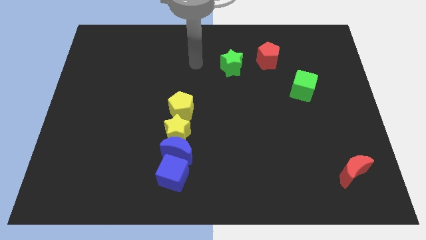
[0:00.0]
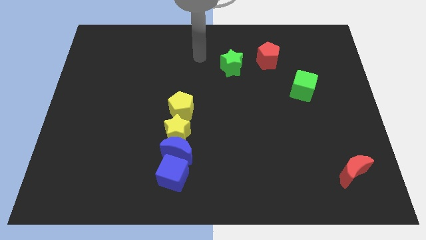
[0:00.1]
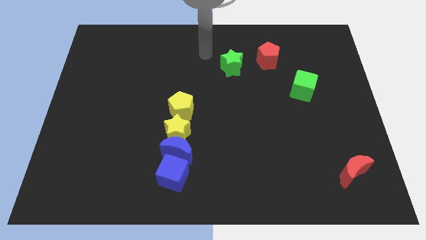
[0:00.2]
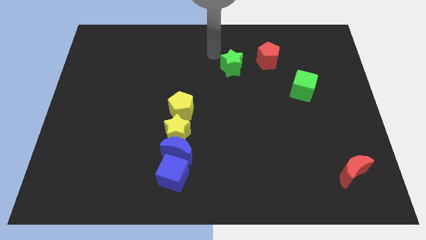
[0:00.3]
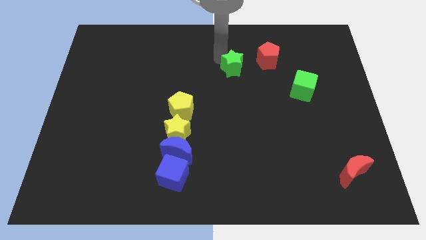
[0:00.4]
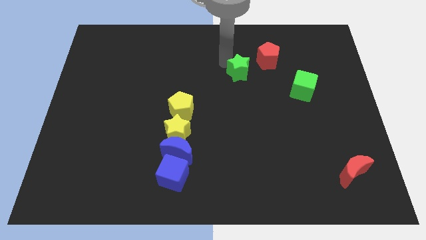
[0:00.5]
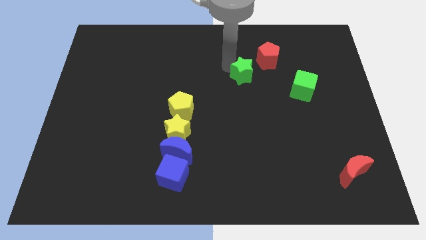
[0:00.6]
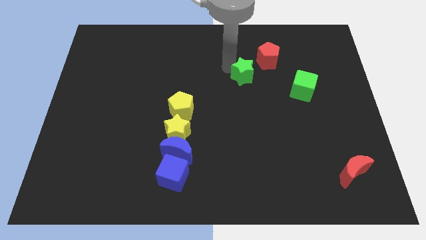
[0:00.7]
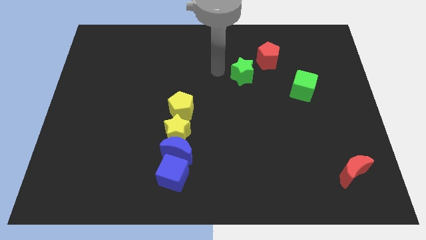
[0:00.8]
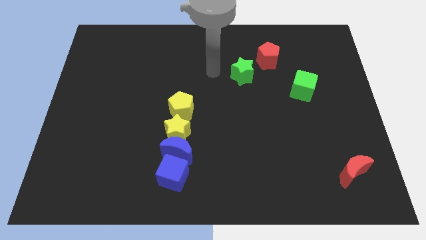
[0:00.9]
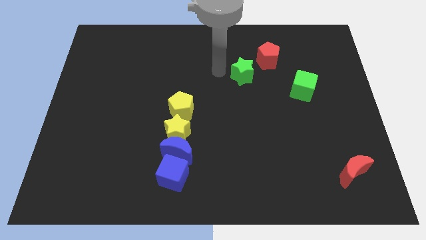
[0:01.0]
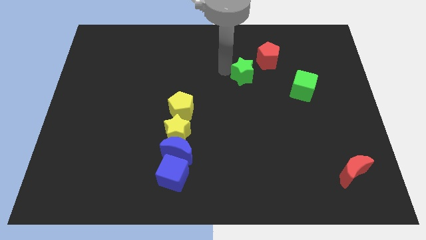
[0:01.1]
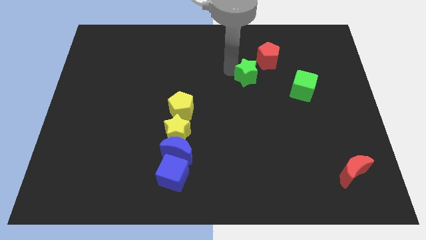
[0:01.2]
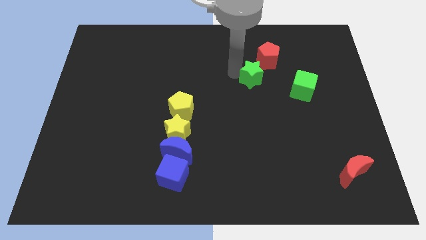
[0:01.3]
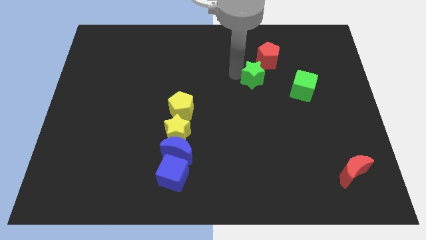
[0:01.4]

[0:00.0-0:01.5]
place the green star left to the green cube

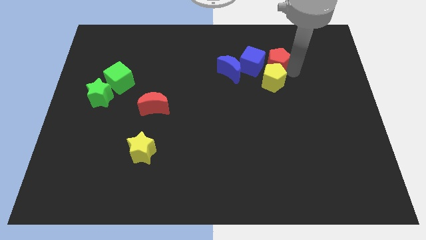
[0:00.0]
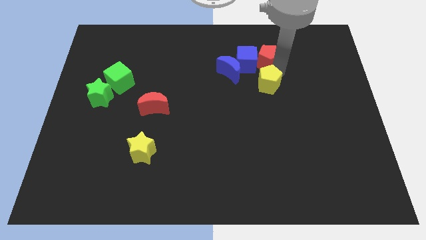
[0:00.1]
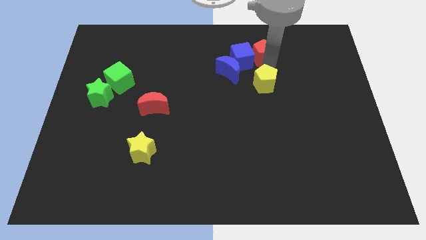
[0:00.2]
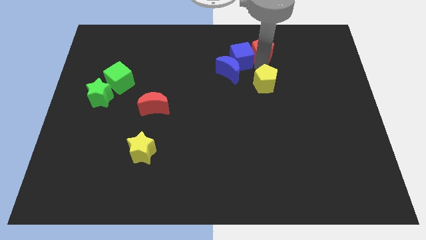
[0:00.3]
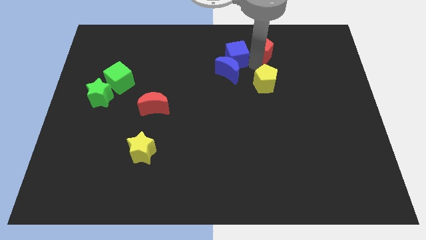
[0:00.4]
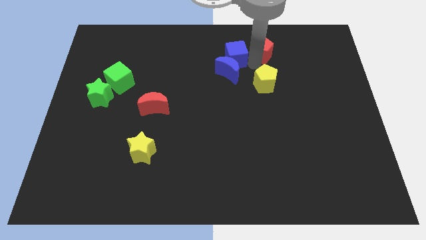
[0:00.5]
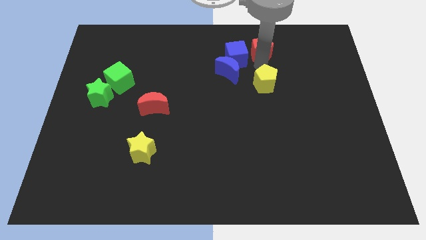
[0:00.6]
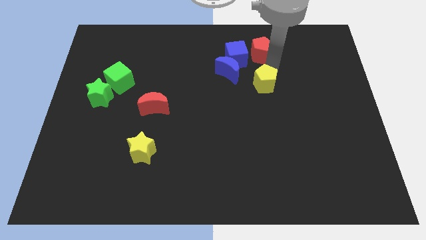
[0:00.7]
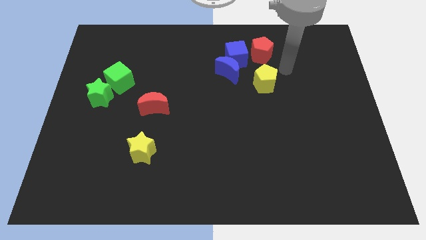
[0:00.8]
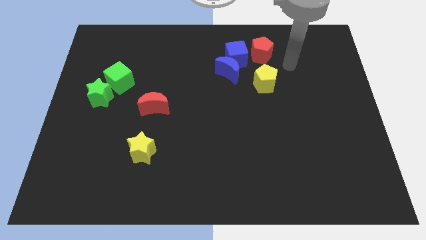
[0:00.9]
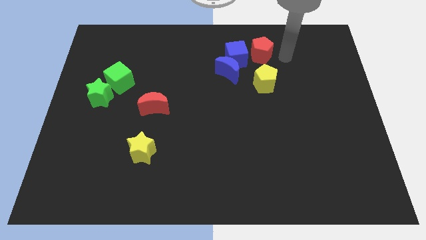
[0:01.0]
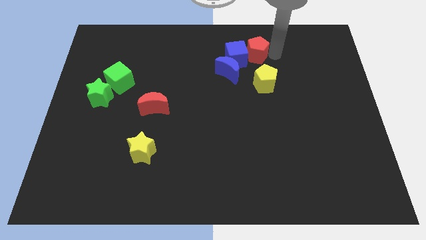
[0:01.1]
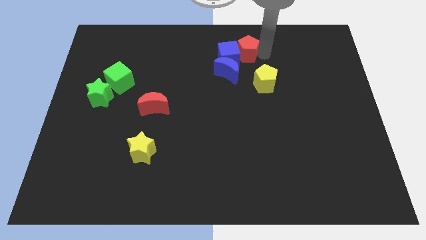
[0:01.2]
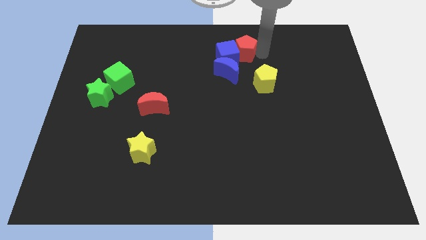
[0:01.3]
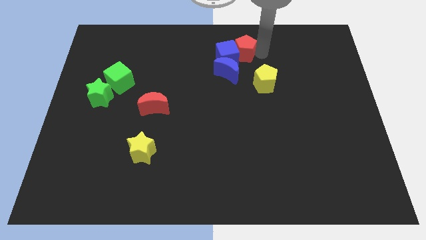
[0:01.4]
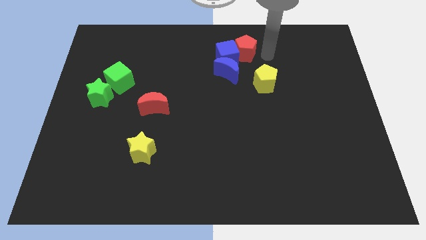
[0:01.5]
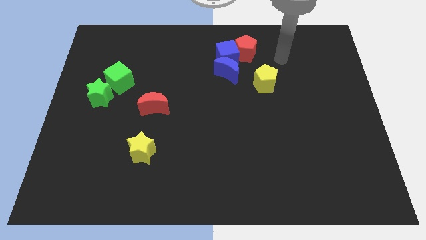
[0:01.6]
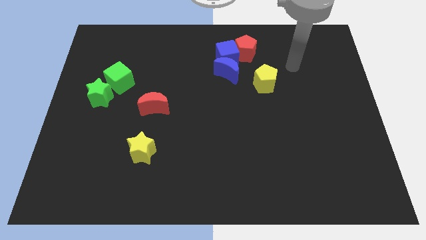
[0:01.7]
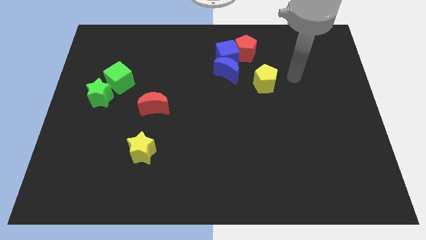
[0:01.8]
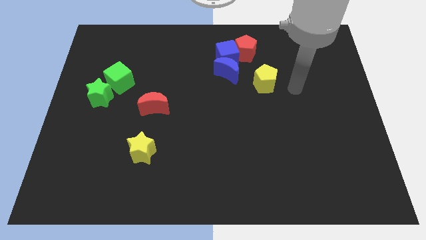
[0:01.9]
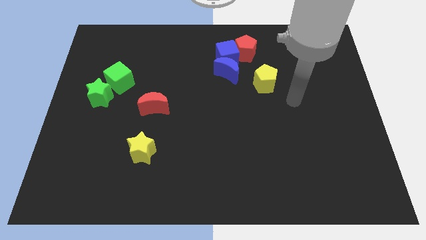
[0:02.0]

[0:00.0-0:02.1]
push the red pentagon into blue cube

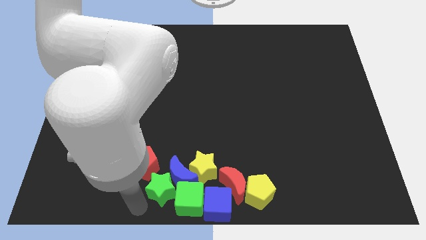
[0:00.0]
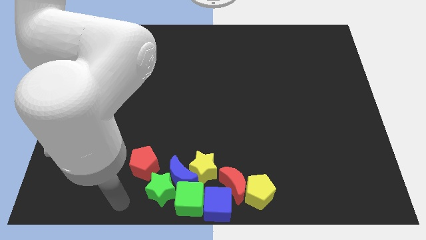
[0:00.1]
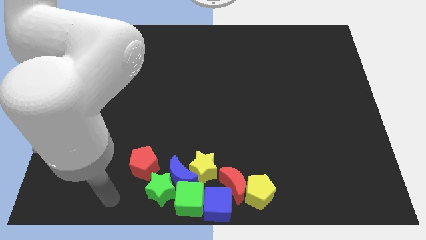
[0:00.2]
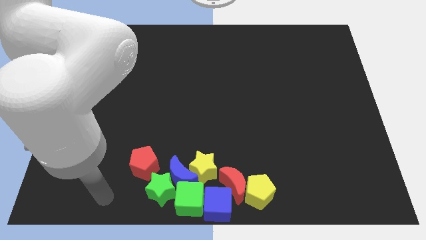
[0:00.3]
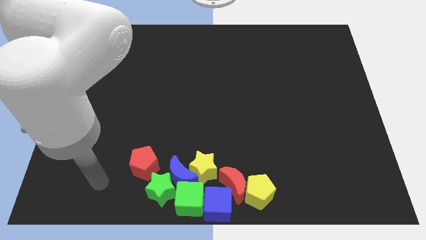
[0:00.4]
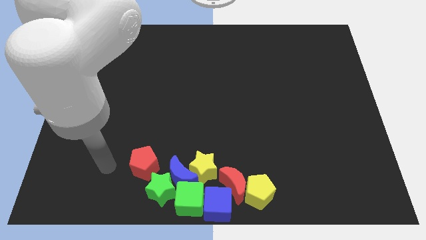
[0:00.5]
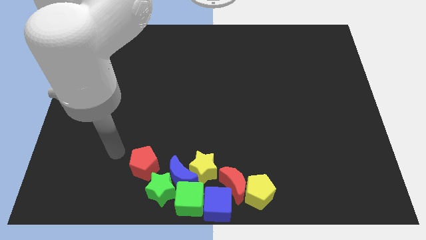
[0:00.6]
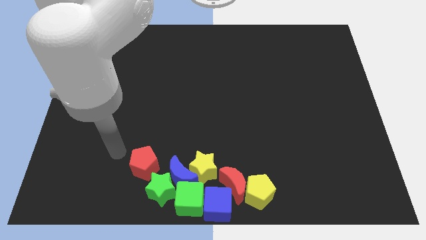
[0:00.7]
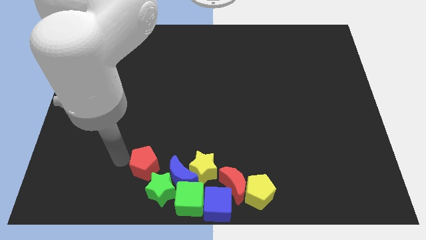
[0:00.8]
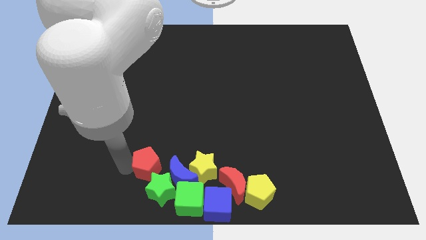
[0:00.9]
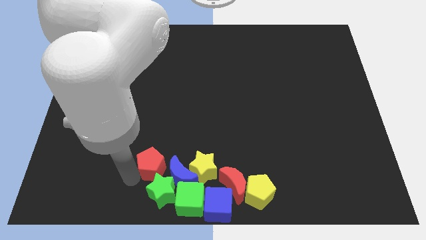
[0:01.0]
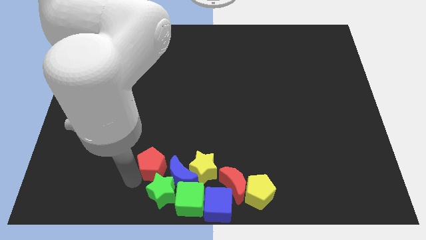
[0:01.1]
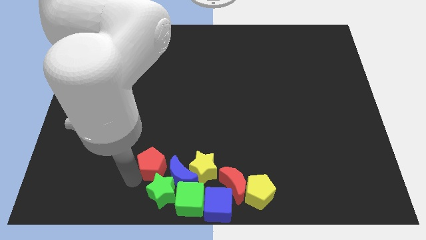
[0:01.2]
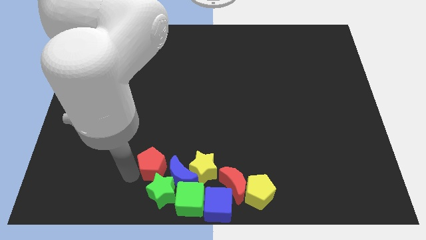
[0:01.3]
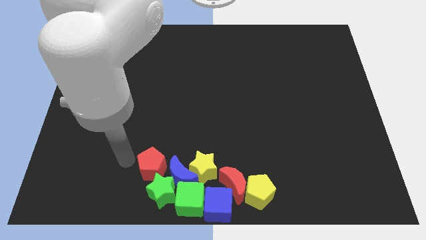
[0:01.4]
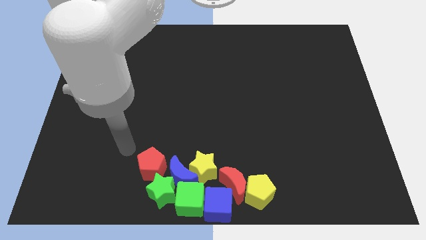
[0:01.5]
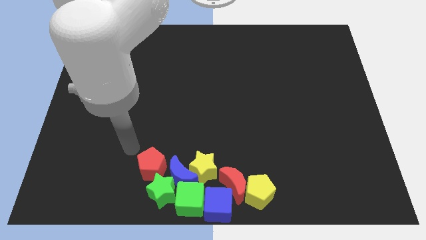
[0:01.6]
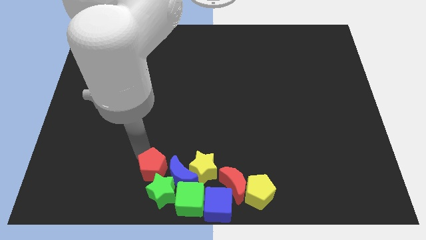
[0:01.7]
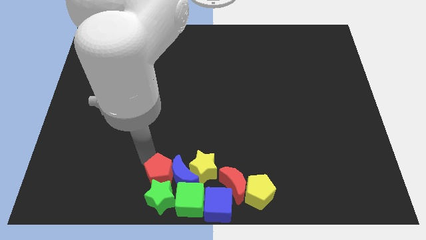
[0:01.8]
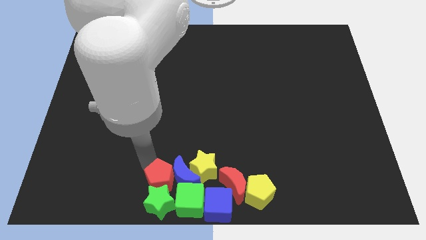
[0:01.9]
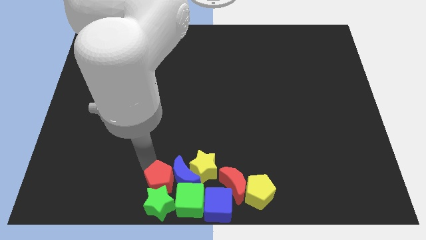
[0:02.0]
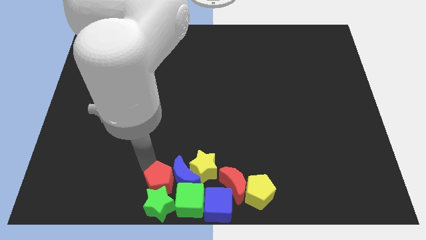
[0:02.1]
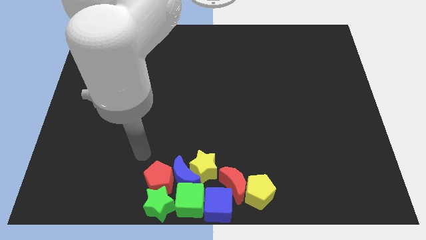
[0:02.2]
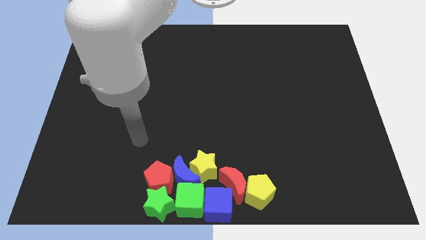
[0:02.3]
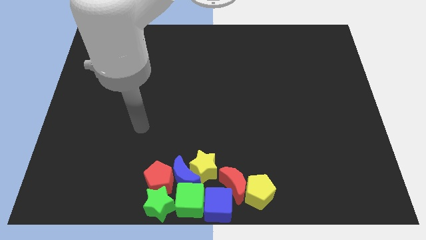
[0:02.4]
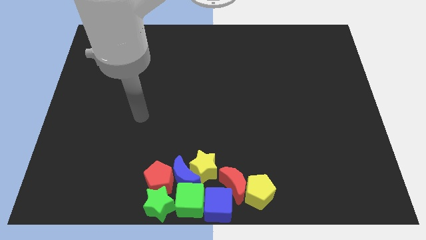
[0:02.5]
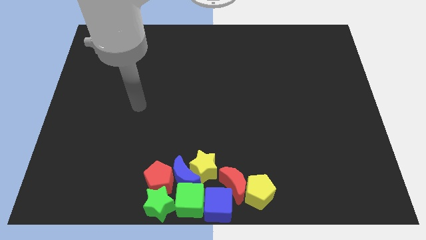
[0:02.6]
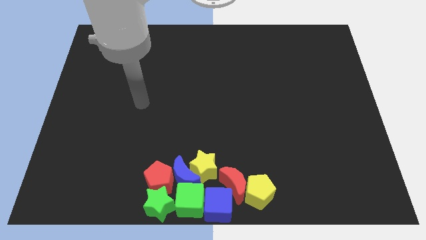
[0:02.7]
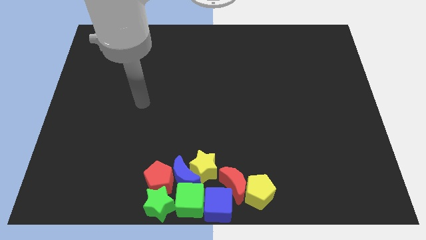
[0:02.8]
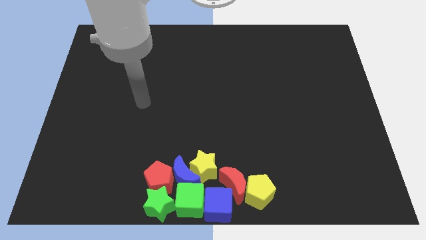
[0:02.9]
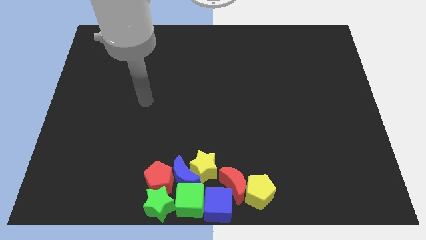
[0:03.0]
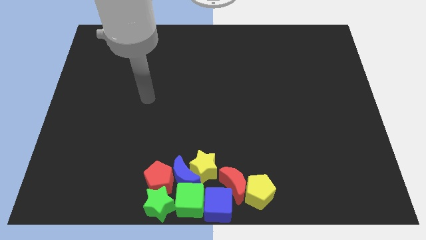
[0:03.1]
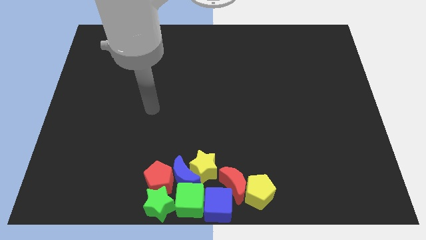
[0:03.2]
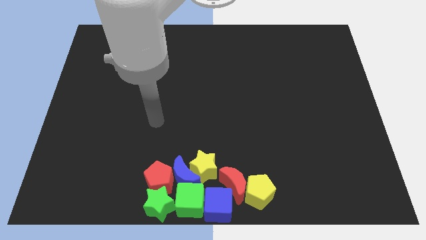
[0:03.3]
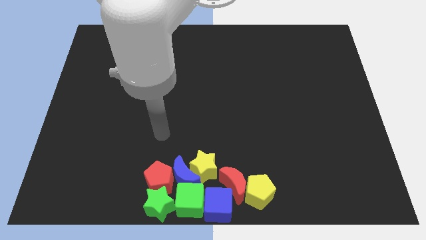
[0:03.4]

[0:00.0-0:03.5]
push the red pentagon into the green star

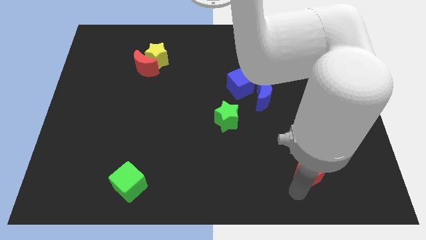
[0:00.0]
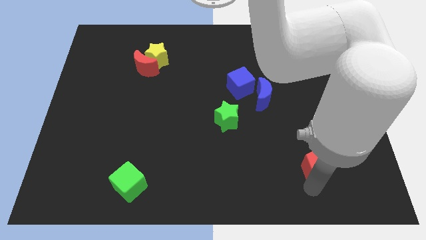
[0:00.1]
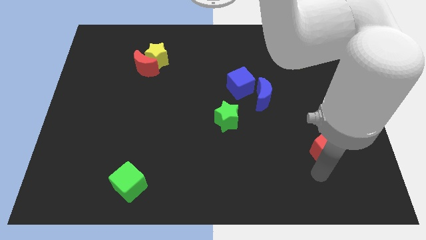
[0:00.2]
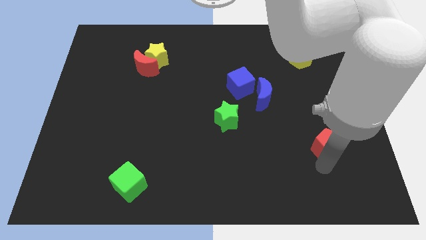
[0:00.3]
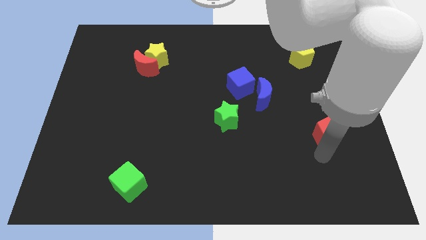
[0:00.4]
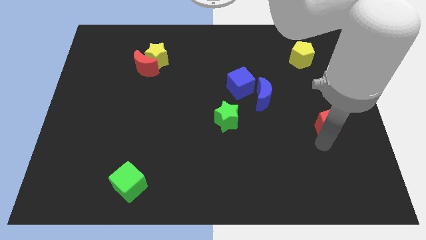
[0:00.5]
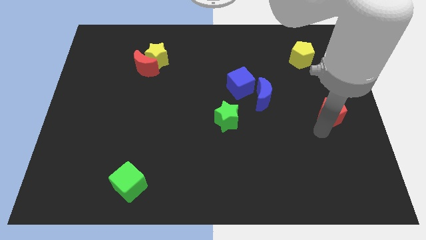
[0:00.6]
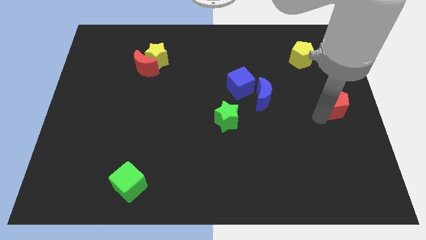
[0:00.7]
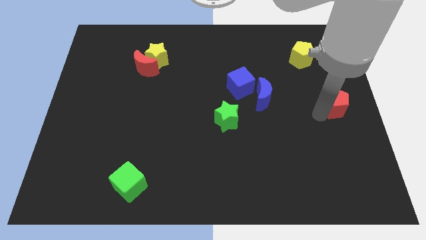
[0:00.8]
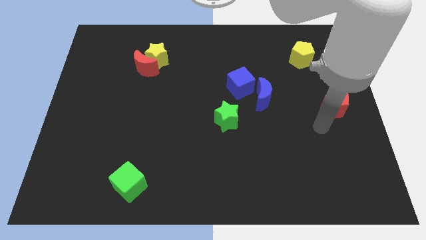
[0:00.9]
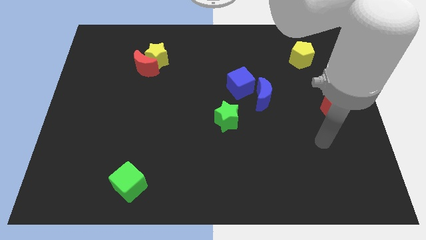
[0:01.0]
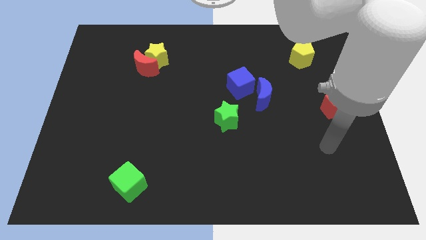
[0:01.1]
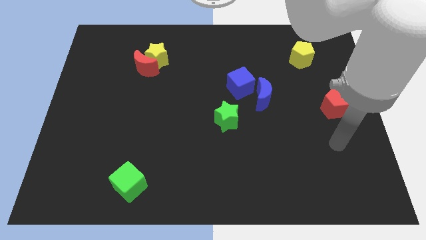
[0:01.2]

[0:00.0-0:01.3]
push red pentagon diagonally upwards

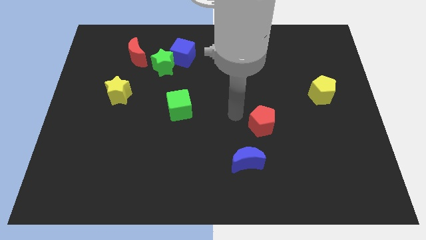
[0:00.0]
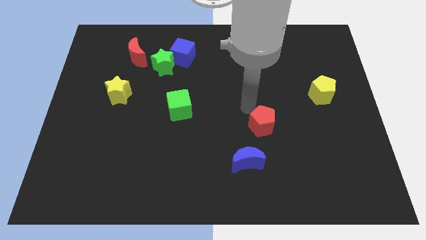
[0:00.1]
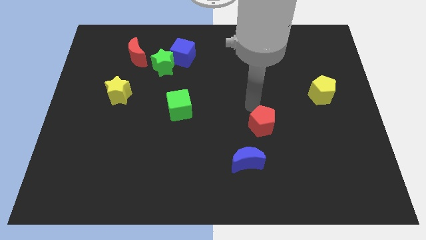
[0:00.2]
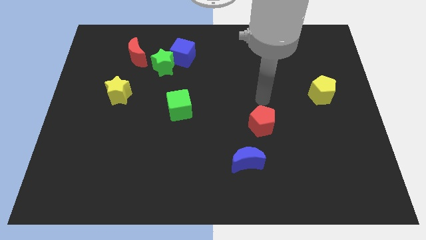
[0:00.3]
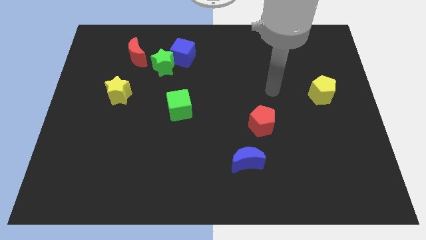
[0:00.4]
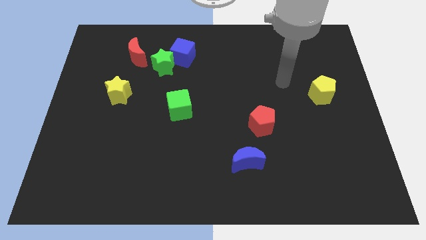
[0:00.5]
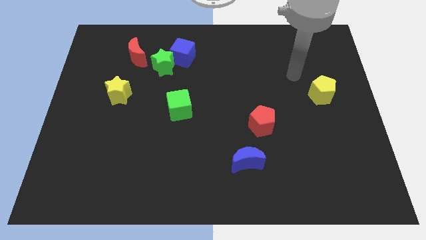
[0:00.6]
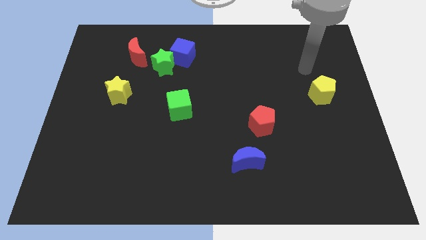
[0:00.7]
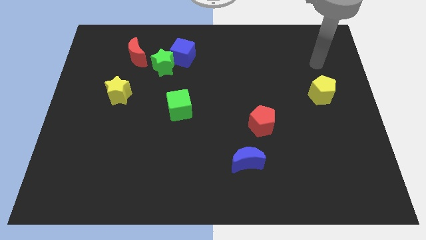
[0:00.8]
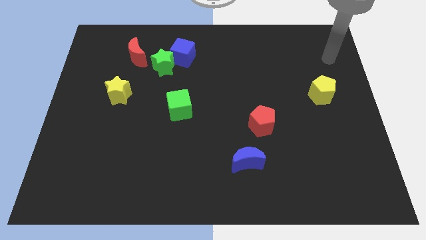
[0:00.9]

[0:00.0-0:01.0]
place your arm near yellow pentagon
